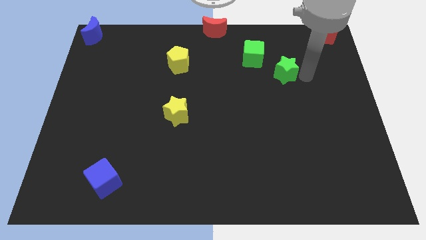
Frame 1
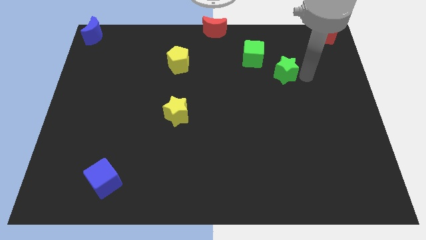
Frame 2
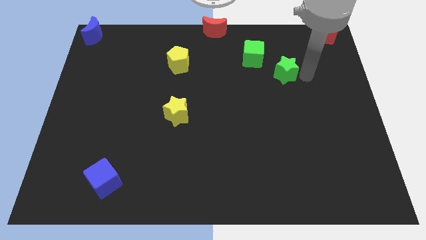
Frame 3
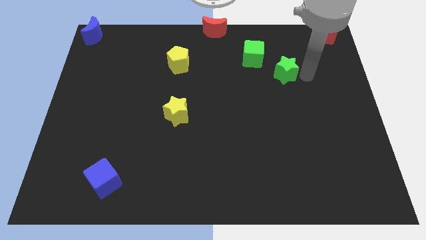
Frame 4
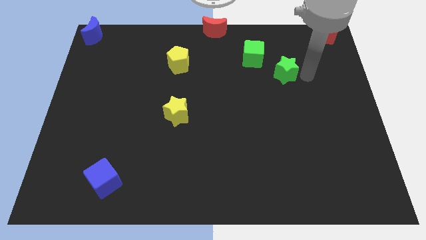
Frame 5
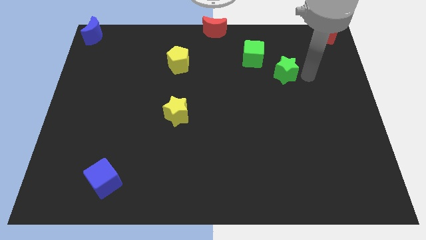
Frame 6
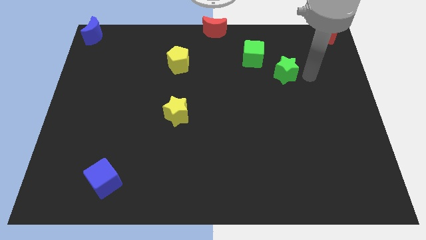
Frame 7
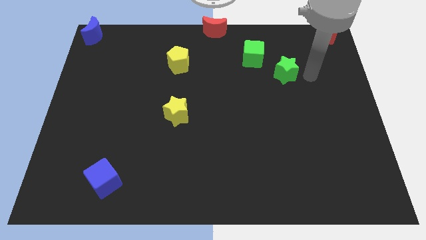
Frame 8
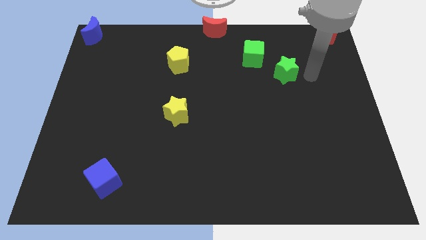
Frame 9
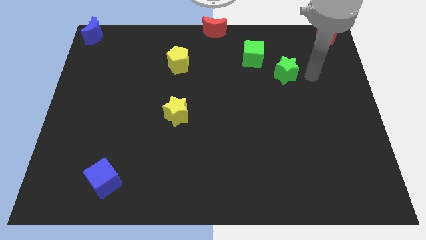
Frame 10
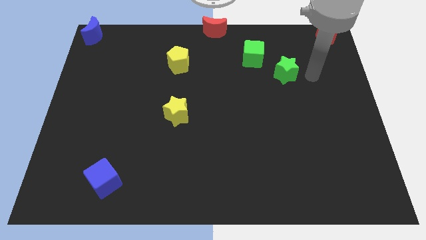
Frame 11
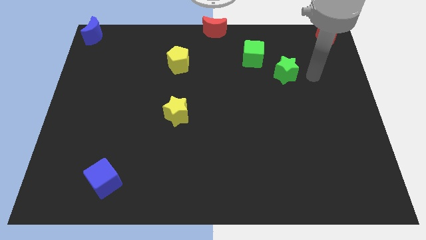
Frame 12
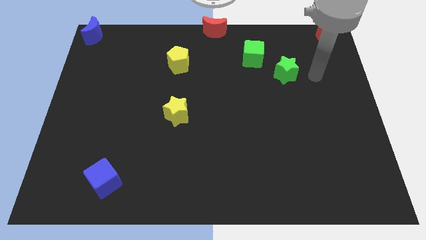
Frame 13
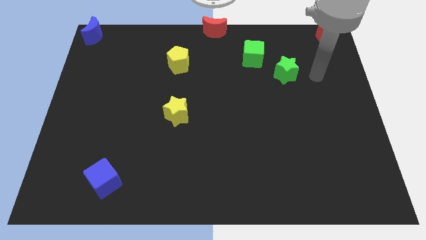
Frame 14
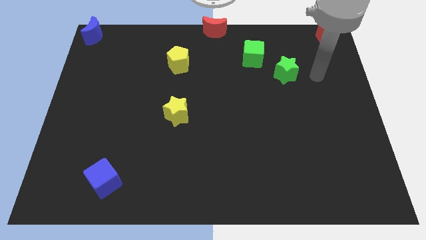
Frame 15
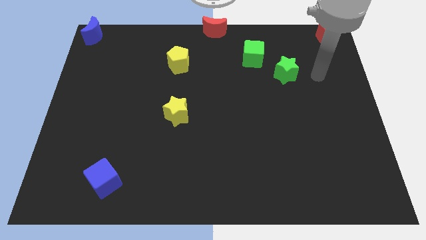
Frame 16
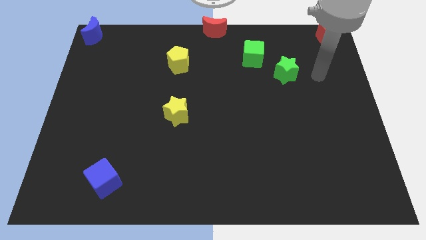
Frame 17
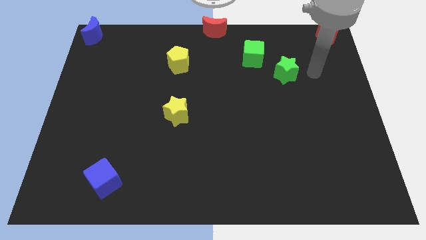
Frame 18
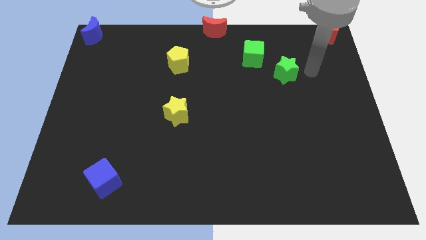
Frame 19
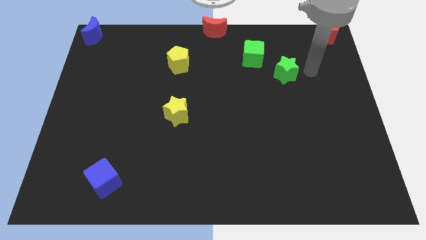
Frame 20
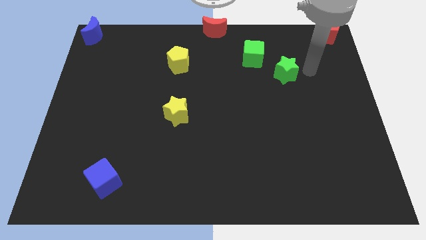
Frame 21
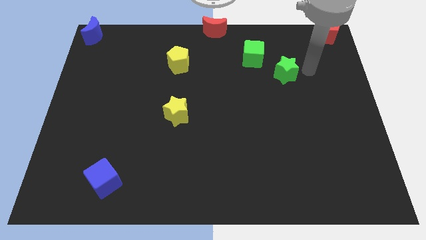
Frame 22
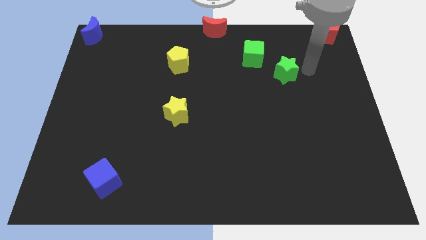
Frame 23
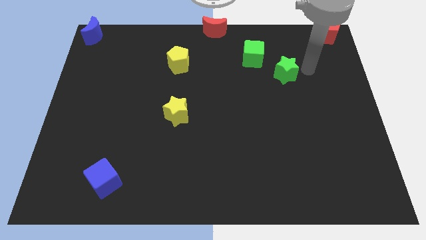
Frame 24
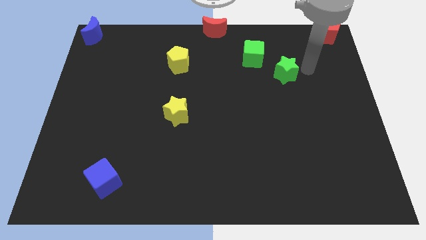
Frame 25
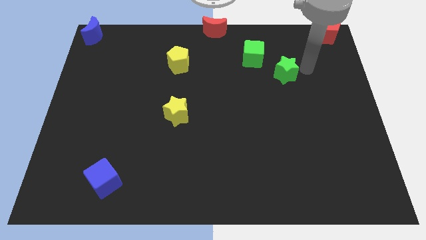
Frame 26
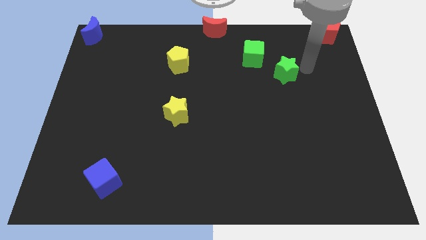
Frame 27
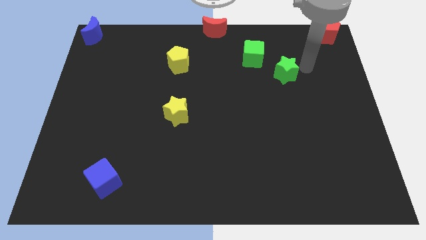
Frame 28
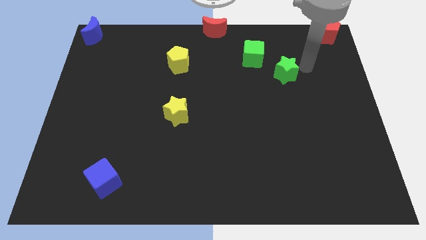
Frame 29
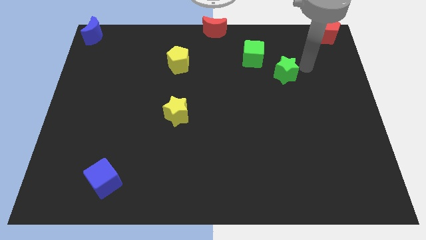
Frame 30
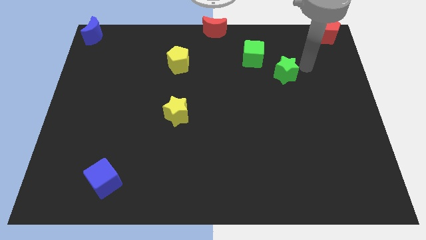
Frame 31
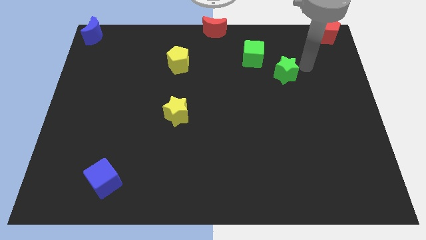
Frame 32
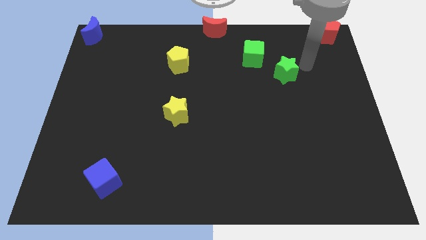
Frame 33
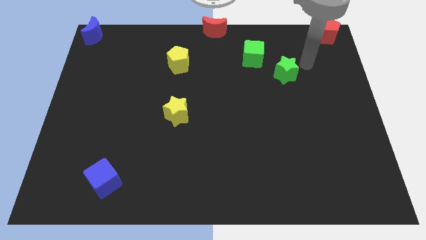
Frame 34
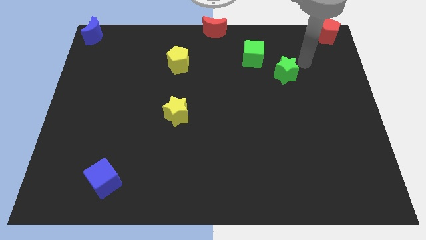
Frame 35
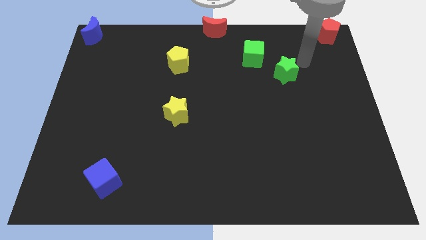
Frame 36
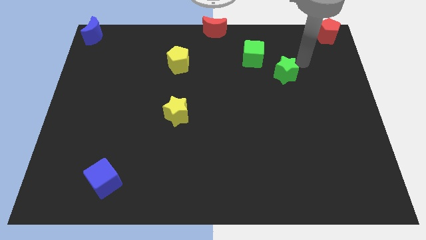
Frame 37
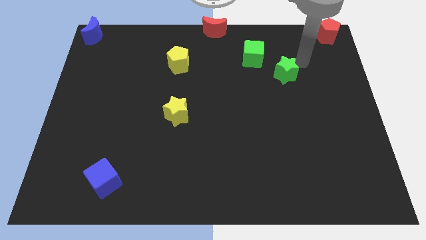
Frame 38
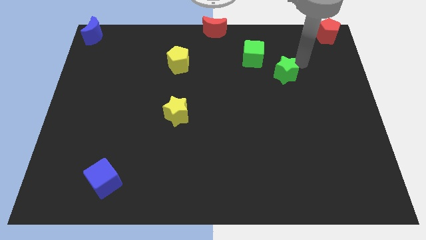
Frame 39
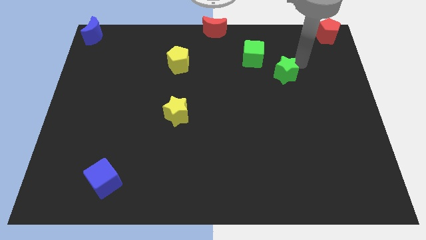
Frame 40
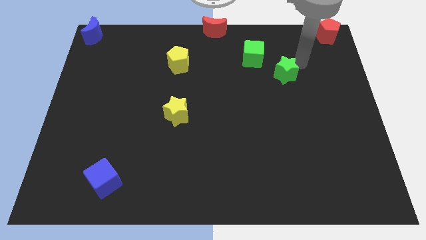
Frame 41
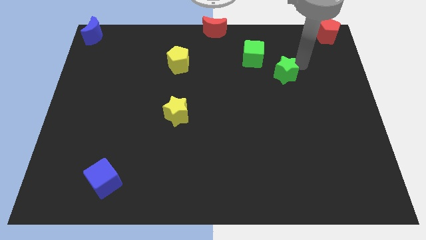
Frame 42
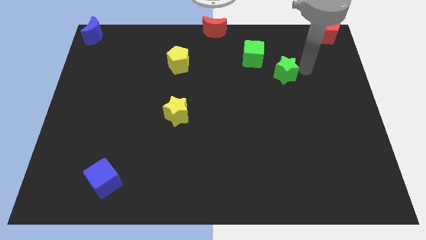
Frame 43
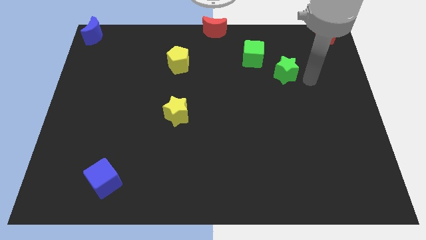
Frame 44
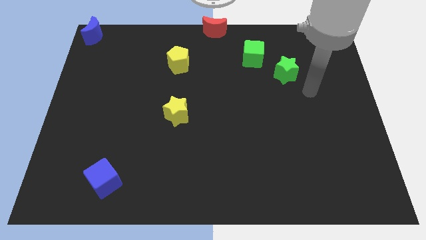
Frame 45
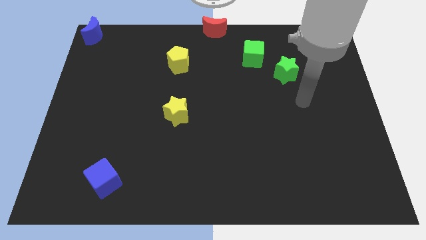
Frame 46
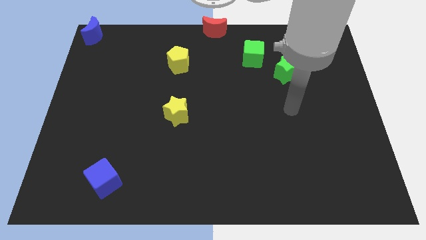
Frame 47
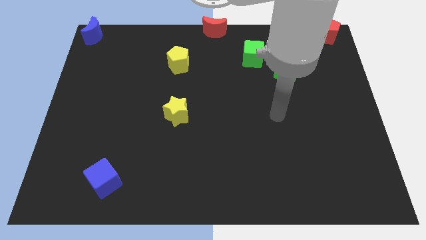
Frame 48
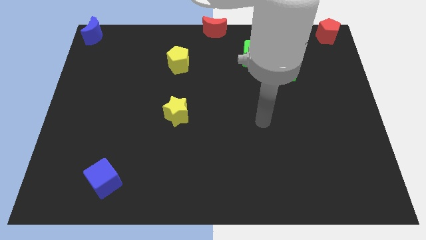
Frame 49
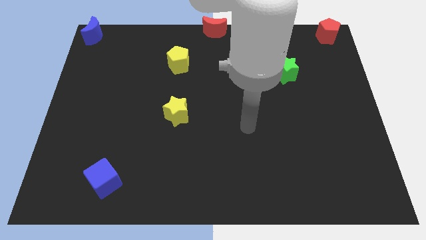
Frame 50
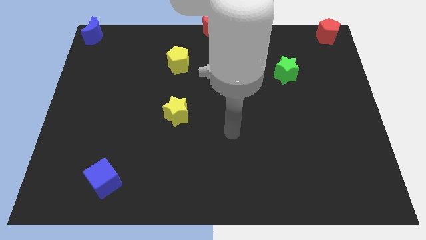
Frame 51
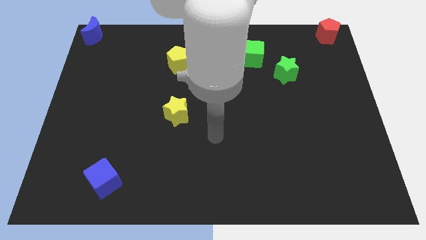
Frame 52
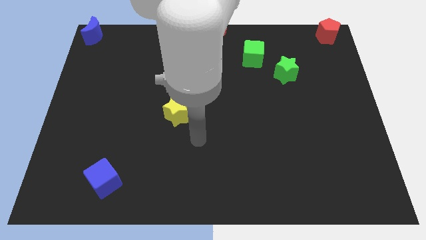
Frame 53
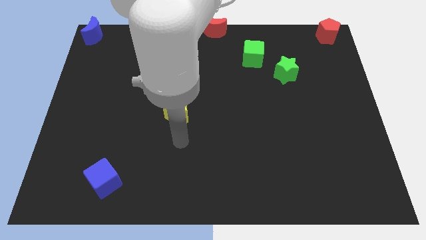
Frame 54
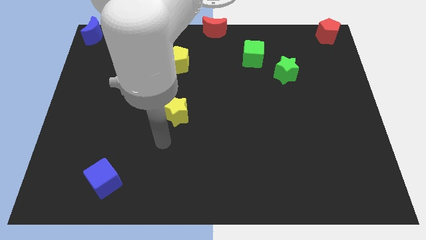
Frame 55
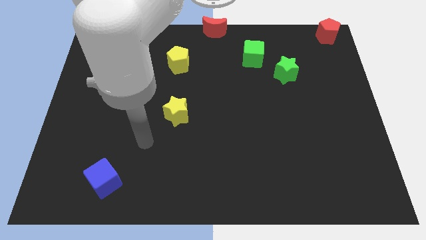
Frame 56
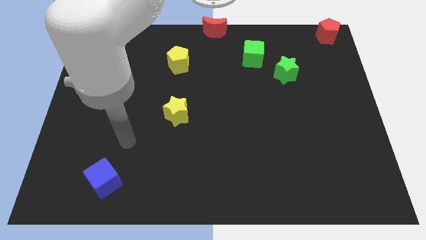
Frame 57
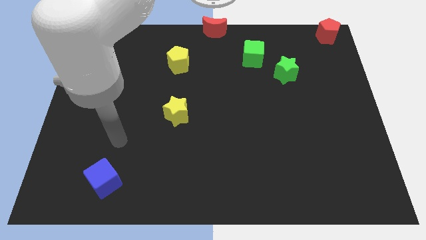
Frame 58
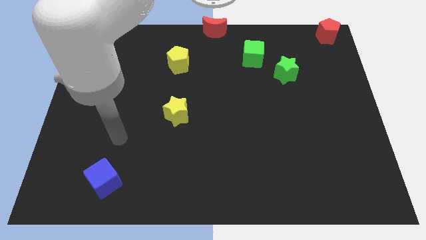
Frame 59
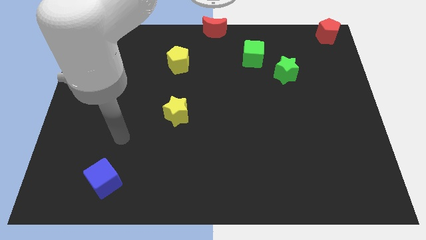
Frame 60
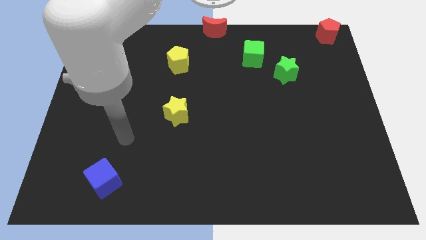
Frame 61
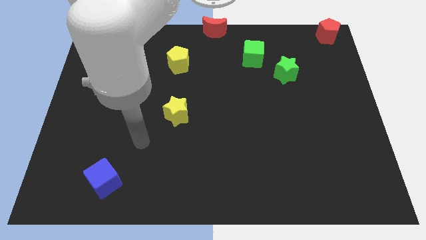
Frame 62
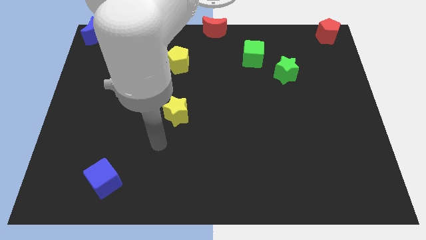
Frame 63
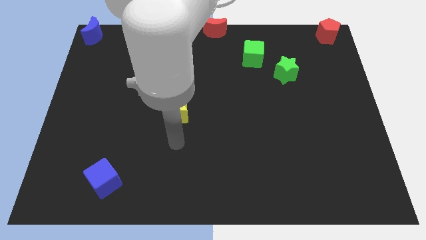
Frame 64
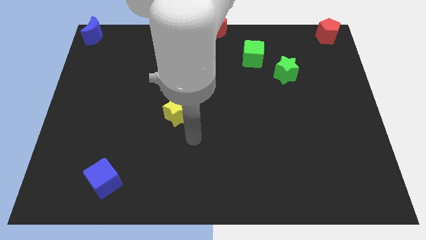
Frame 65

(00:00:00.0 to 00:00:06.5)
move your hand below the yellow star

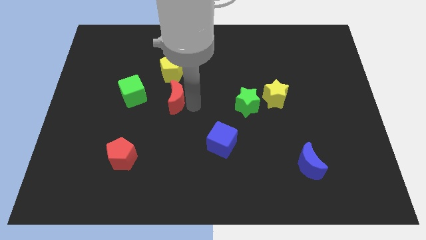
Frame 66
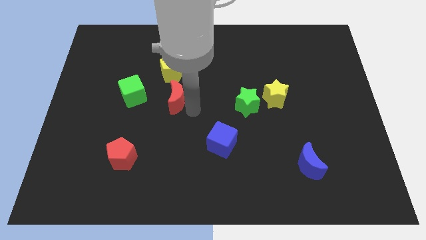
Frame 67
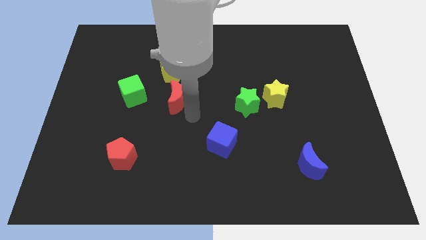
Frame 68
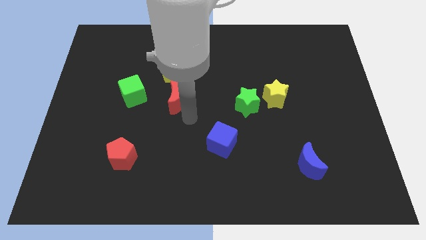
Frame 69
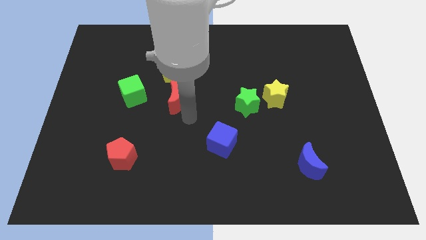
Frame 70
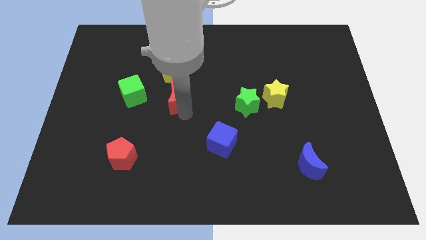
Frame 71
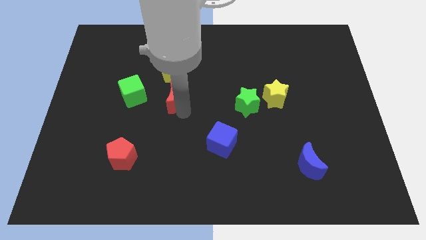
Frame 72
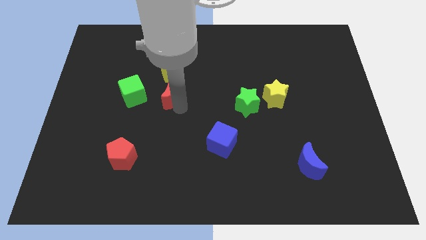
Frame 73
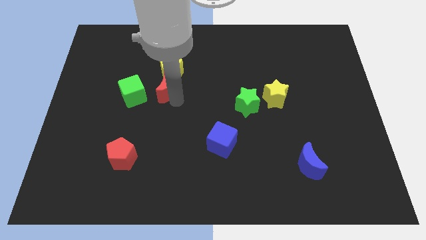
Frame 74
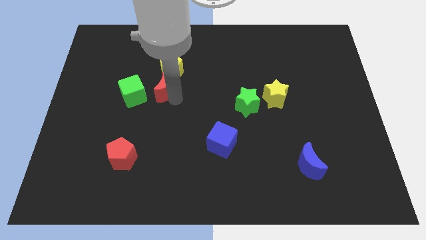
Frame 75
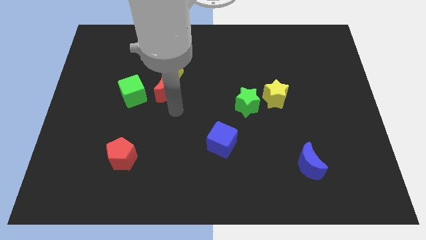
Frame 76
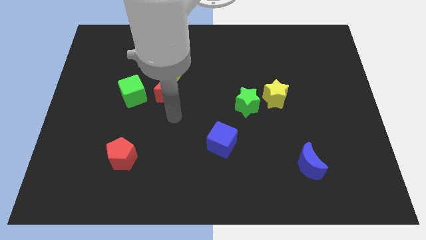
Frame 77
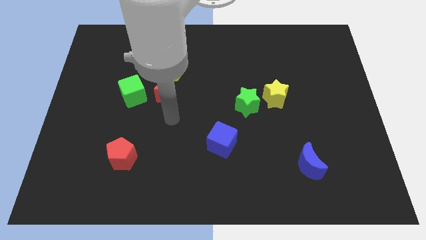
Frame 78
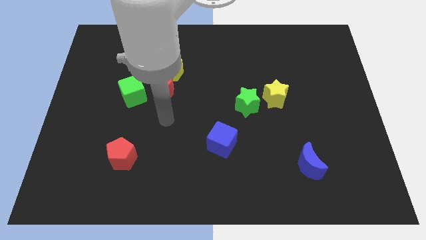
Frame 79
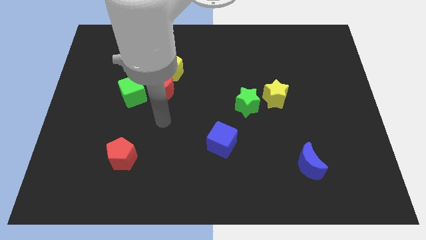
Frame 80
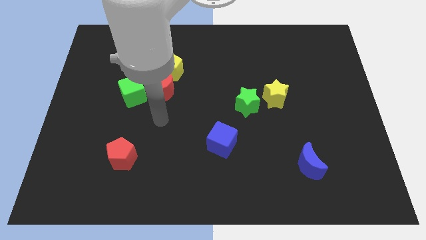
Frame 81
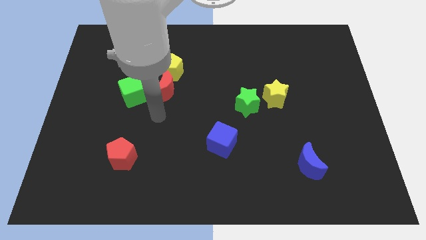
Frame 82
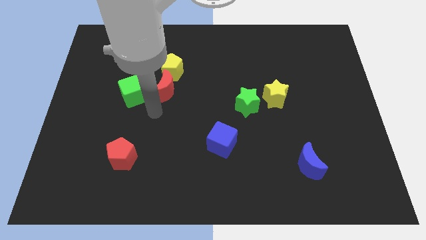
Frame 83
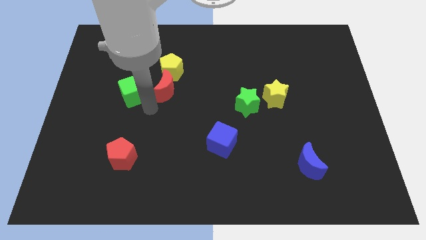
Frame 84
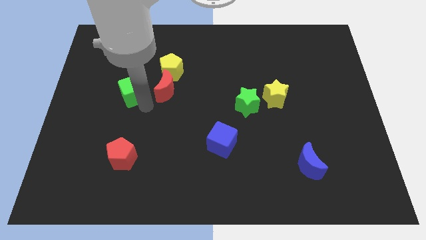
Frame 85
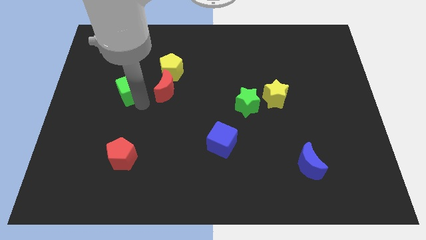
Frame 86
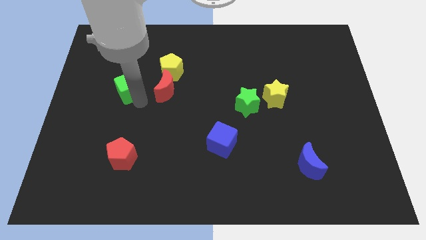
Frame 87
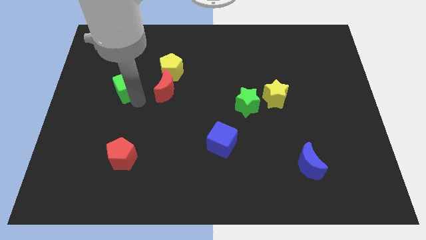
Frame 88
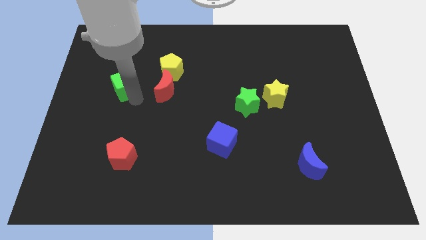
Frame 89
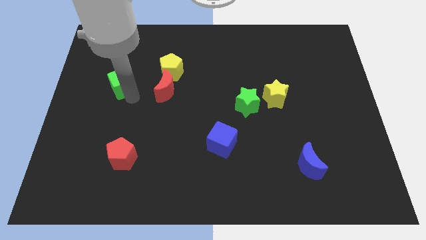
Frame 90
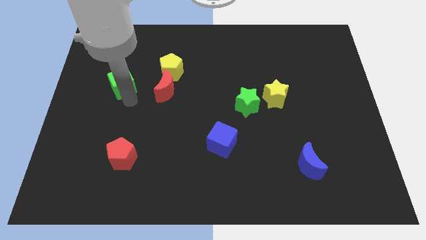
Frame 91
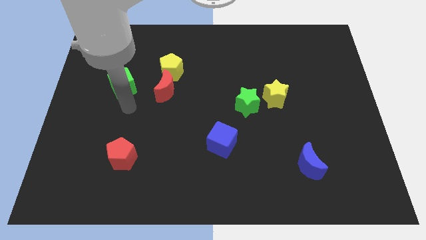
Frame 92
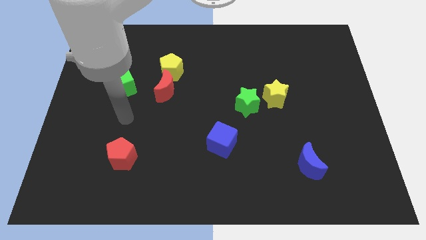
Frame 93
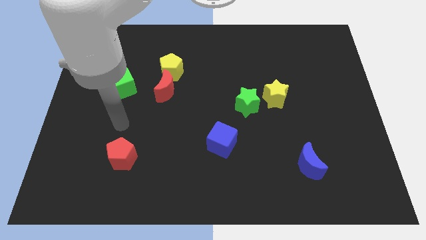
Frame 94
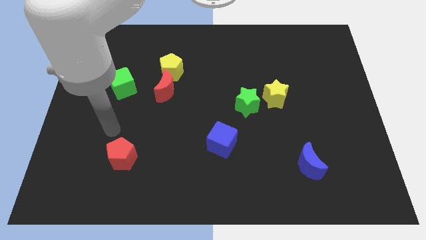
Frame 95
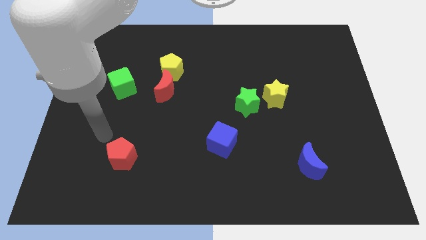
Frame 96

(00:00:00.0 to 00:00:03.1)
move green cube towards left side
